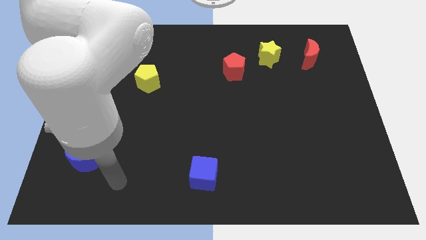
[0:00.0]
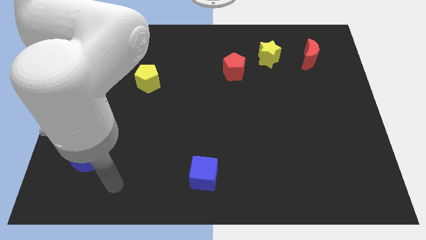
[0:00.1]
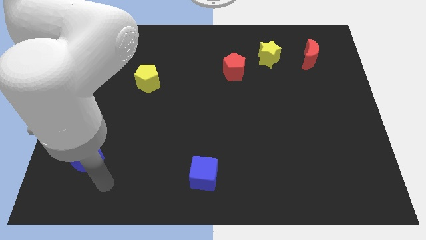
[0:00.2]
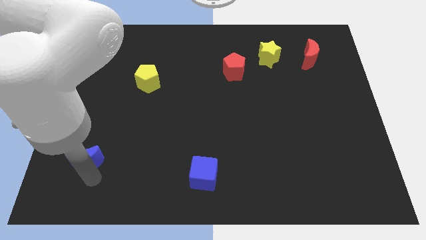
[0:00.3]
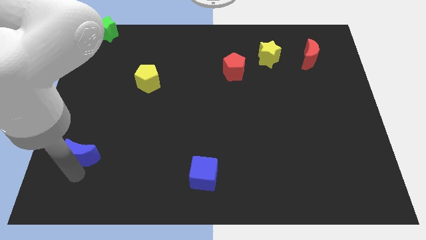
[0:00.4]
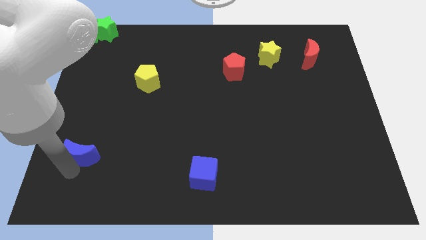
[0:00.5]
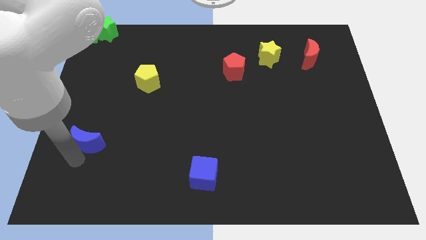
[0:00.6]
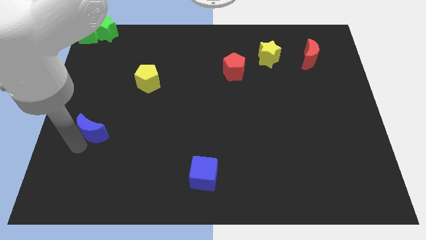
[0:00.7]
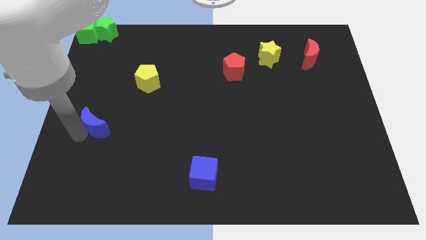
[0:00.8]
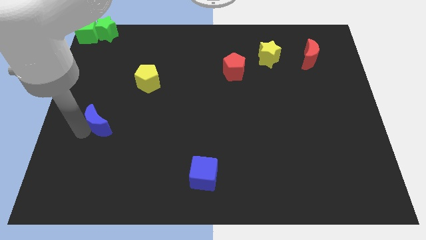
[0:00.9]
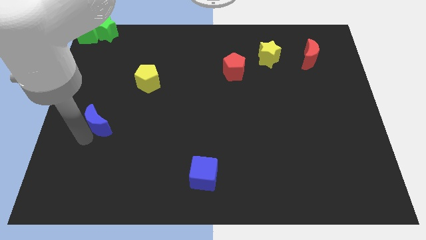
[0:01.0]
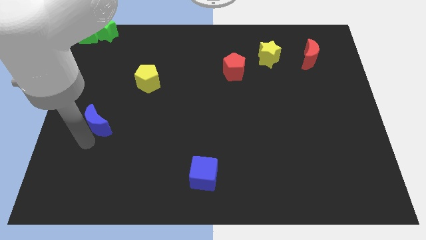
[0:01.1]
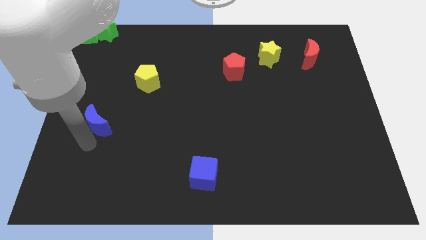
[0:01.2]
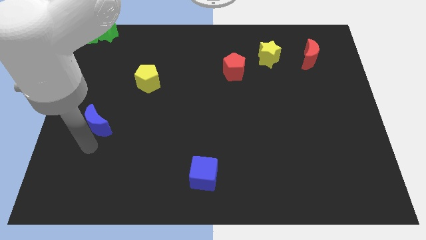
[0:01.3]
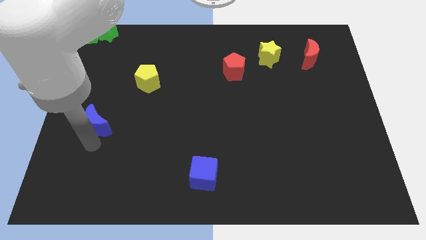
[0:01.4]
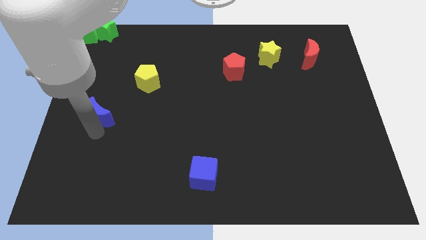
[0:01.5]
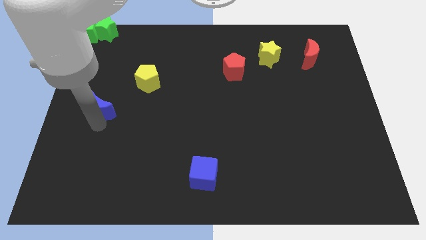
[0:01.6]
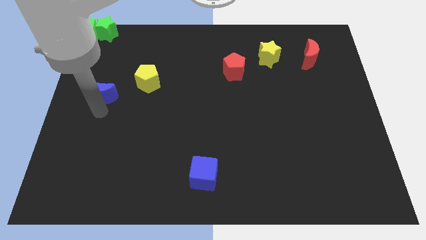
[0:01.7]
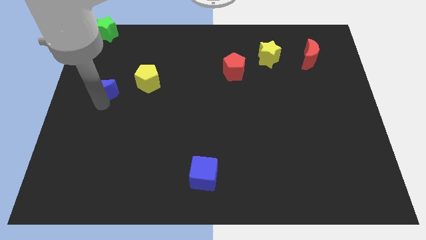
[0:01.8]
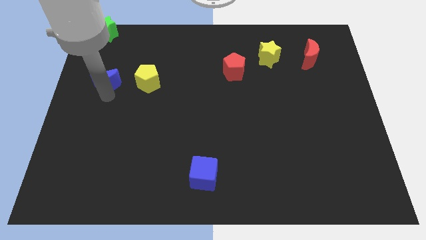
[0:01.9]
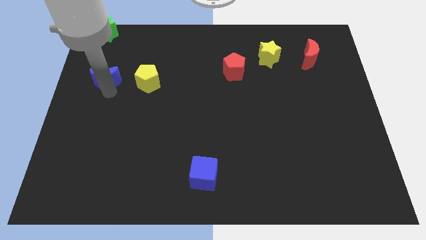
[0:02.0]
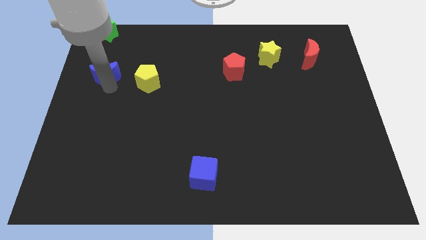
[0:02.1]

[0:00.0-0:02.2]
place blue moon to the left of yellow pentagon

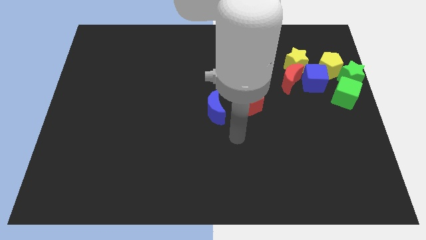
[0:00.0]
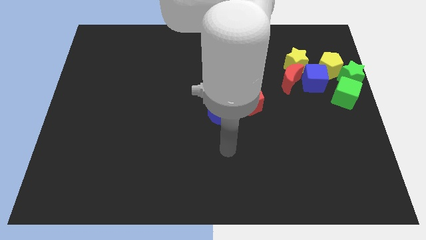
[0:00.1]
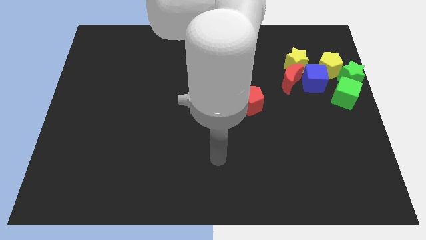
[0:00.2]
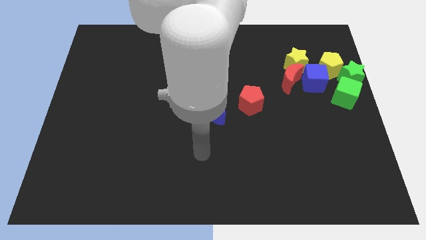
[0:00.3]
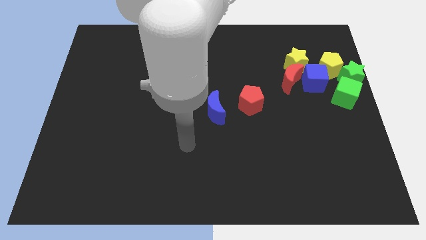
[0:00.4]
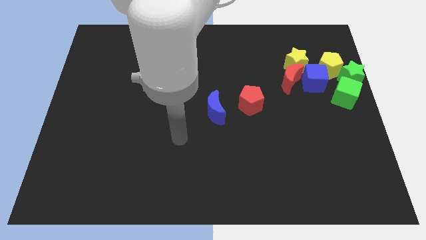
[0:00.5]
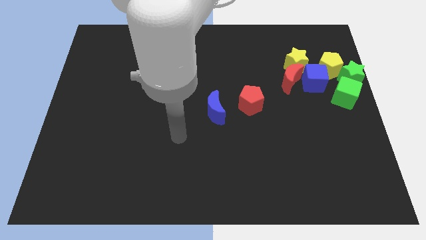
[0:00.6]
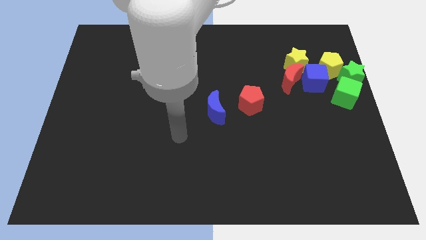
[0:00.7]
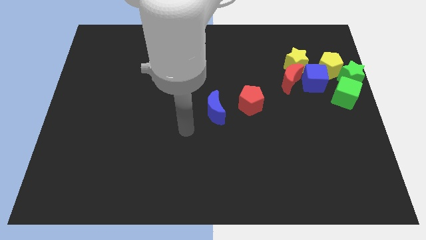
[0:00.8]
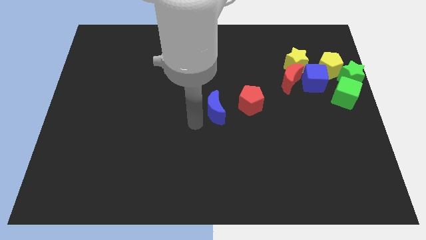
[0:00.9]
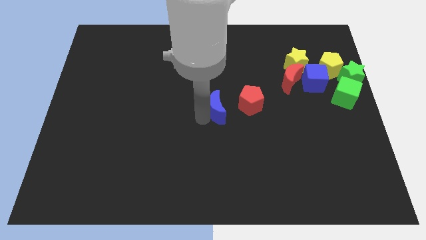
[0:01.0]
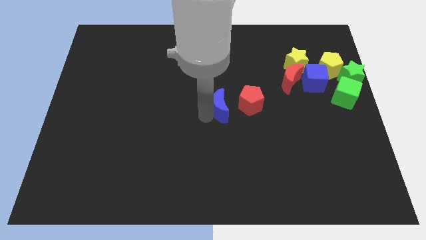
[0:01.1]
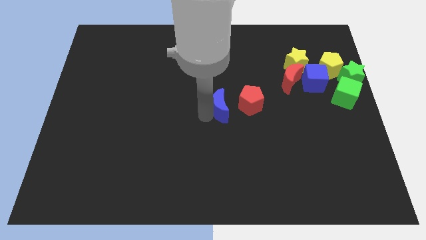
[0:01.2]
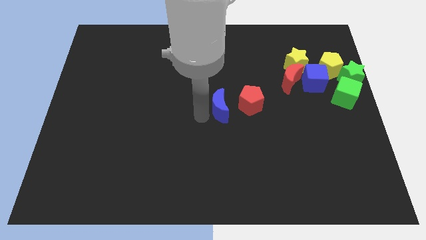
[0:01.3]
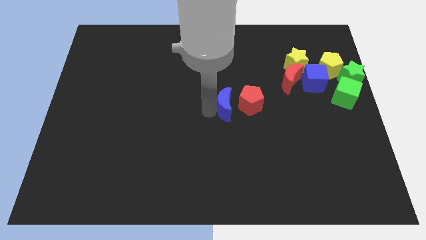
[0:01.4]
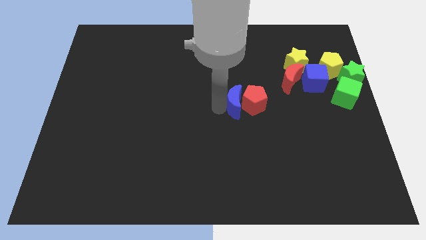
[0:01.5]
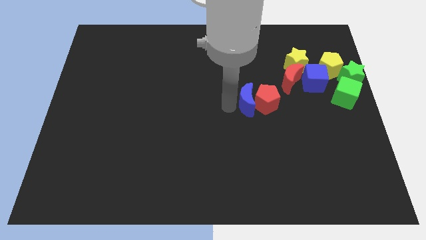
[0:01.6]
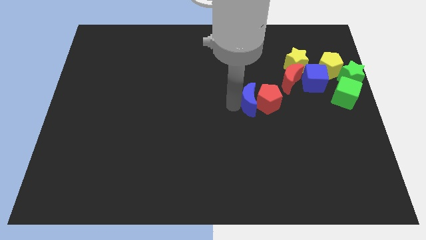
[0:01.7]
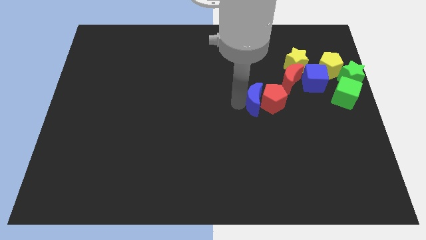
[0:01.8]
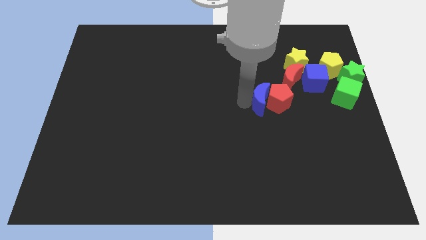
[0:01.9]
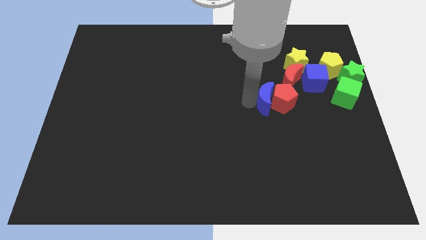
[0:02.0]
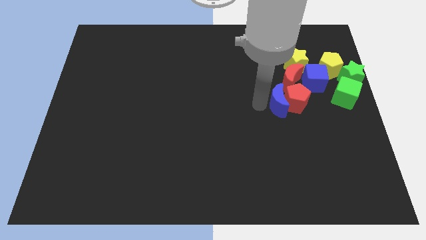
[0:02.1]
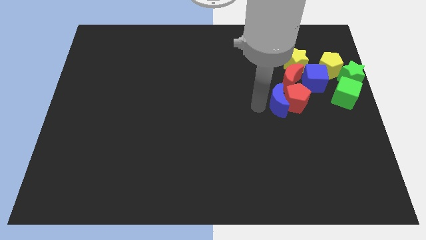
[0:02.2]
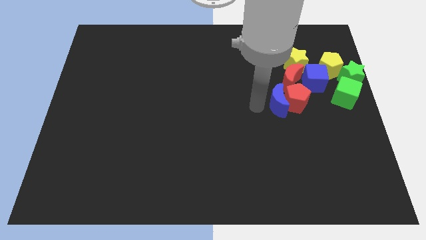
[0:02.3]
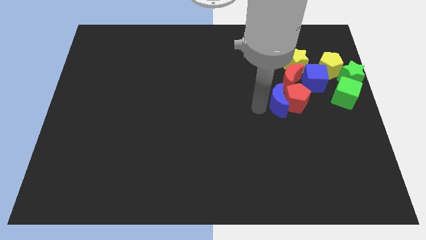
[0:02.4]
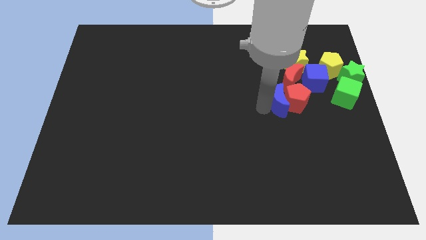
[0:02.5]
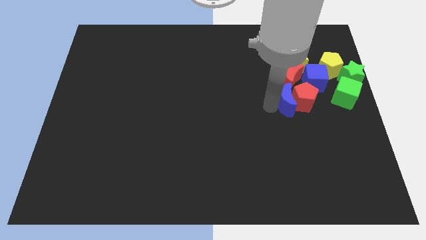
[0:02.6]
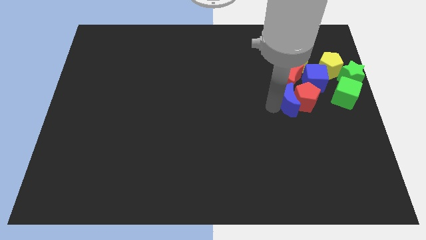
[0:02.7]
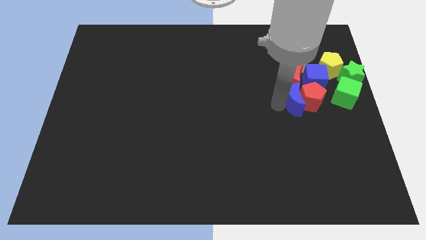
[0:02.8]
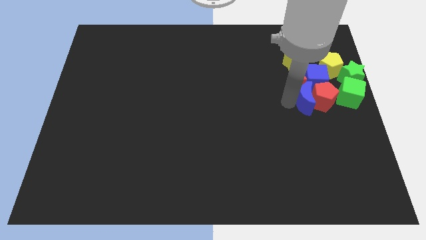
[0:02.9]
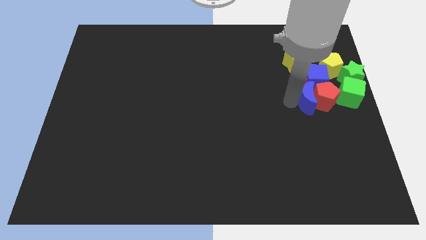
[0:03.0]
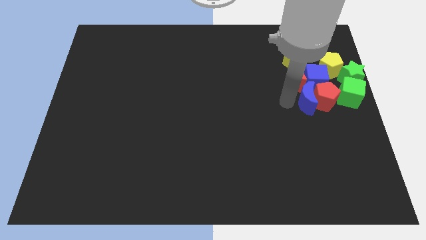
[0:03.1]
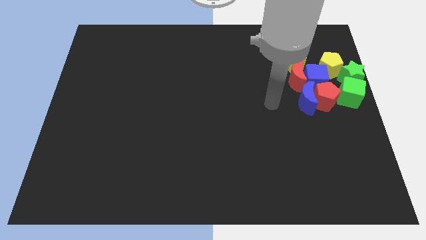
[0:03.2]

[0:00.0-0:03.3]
push the blue moon and red pentagon into the group of blocks

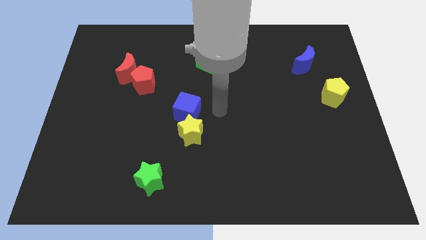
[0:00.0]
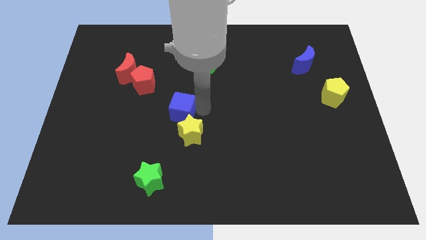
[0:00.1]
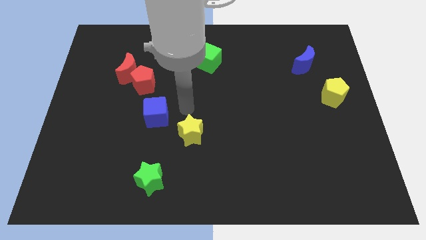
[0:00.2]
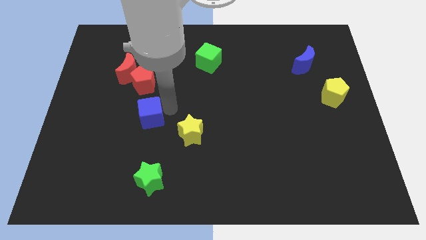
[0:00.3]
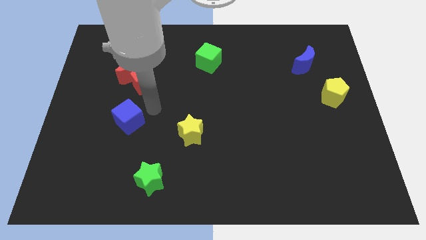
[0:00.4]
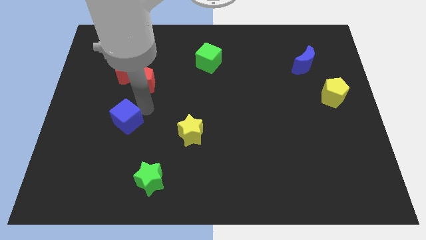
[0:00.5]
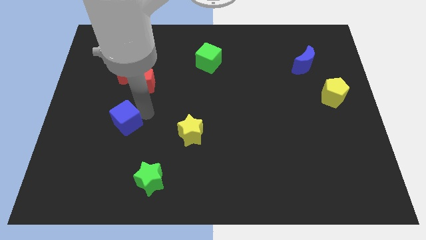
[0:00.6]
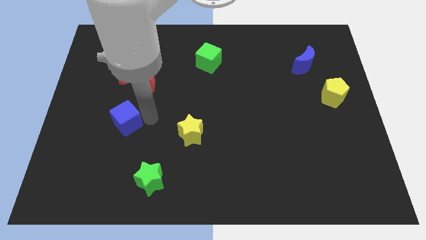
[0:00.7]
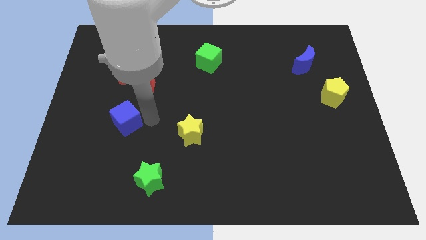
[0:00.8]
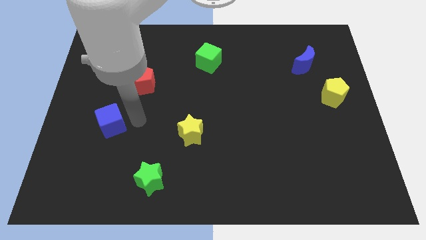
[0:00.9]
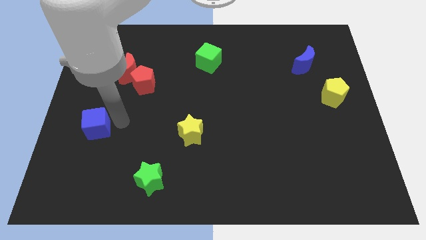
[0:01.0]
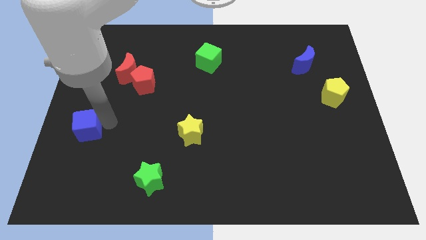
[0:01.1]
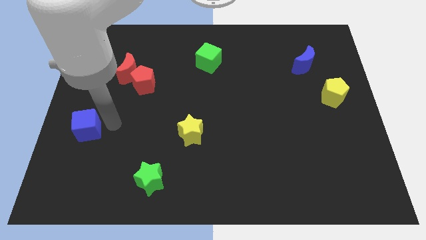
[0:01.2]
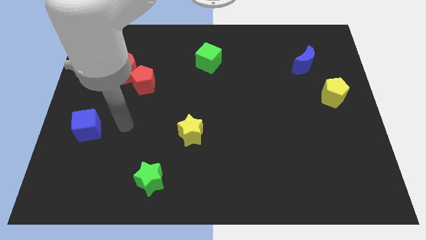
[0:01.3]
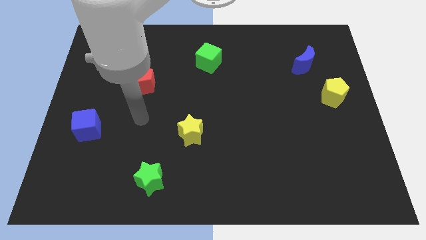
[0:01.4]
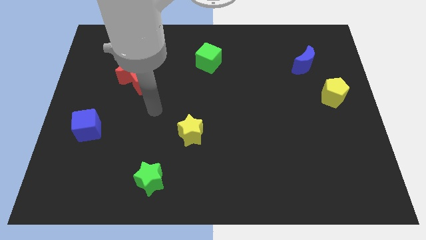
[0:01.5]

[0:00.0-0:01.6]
move the blue cube horizontally left to the yellow star

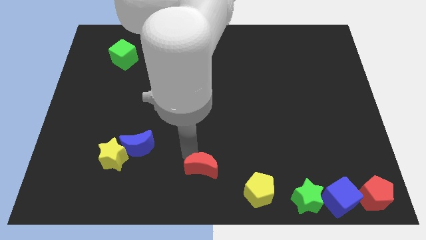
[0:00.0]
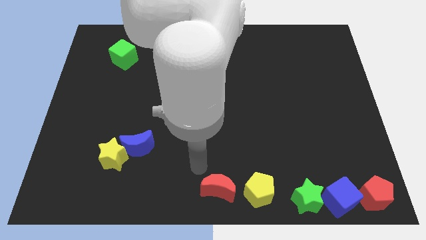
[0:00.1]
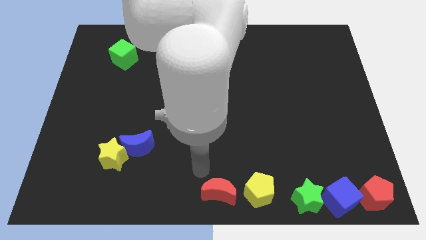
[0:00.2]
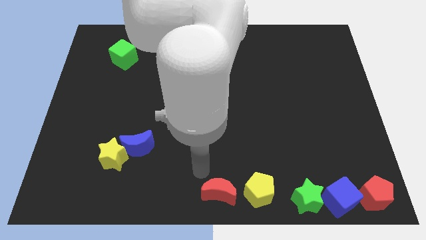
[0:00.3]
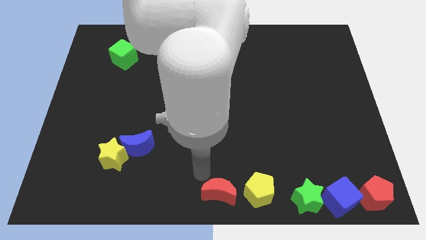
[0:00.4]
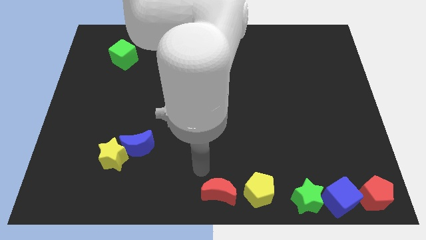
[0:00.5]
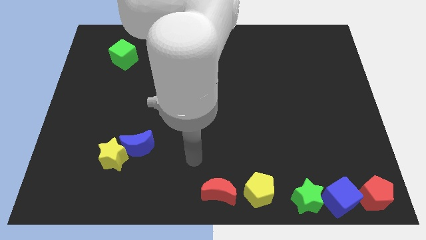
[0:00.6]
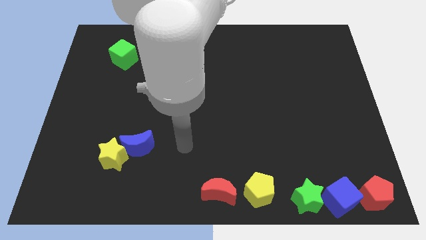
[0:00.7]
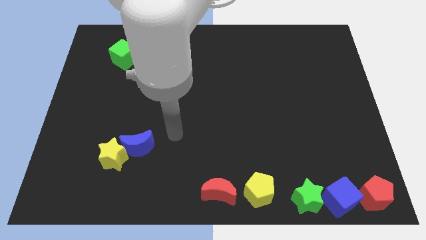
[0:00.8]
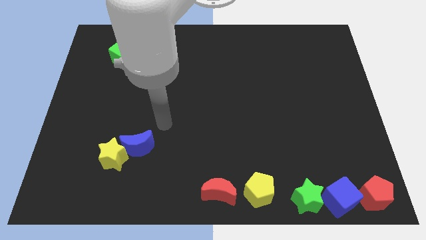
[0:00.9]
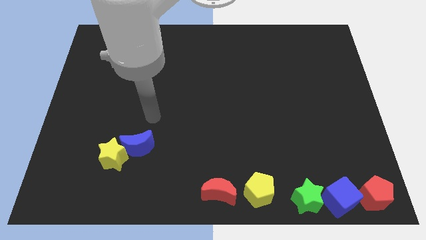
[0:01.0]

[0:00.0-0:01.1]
place the red crescent to the bottom left side of the yellow pentagon

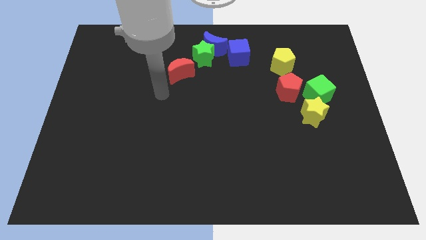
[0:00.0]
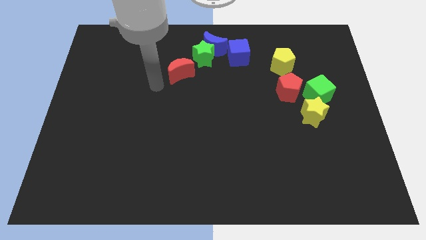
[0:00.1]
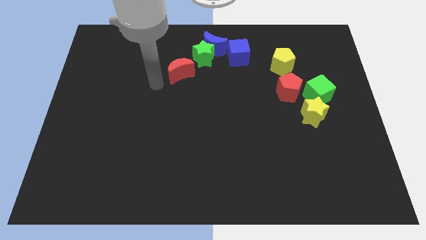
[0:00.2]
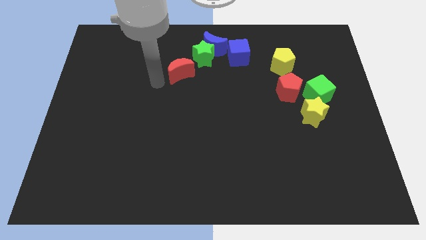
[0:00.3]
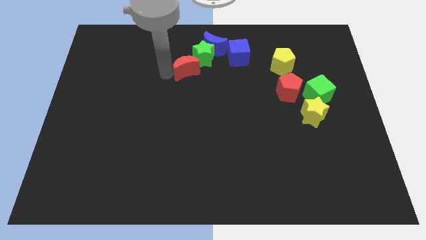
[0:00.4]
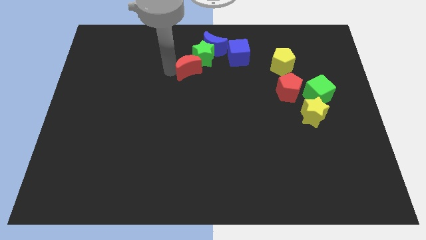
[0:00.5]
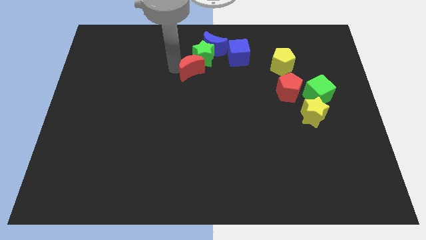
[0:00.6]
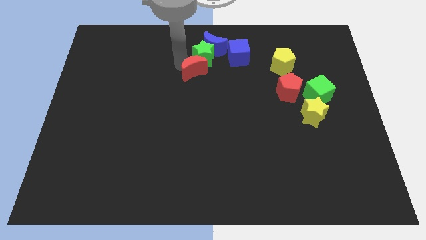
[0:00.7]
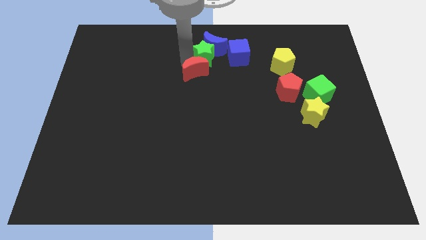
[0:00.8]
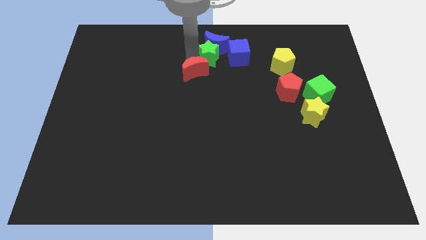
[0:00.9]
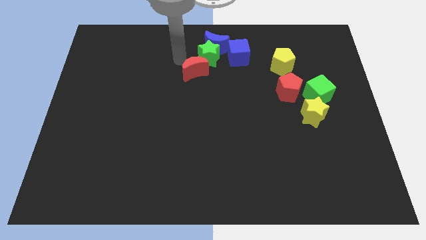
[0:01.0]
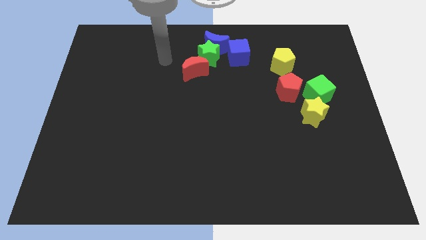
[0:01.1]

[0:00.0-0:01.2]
push the red crescent to the left of the green star
